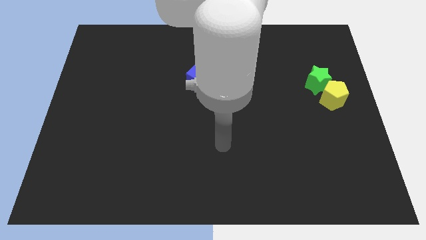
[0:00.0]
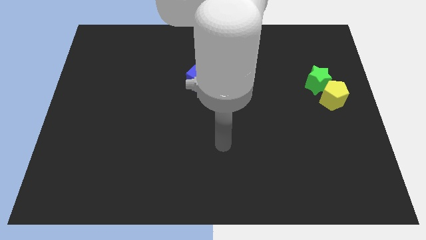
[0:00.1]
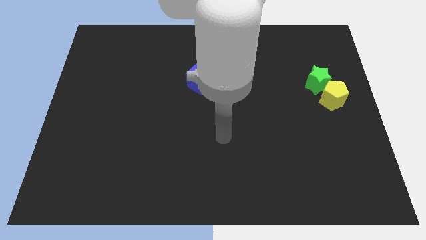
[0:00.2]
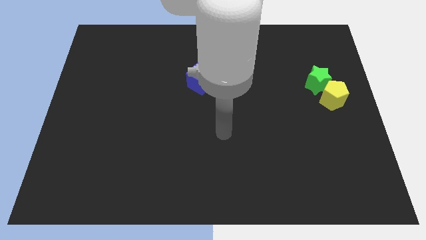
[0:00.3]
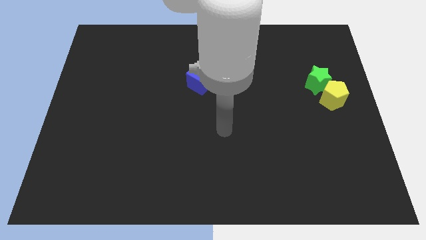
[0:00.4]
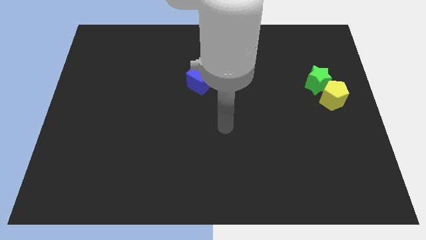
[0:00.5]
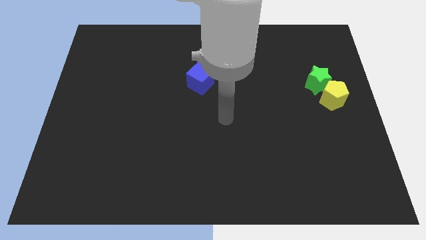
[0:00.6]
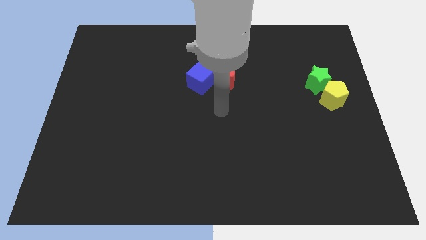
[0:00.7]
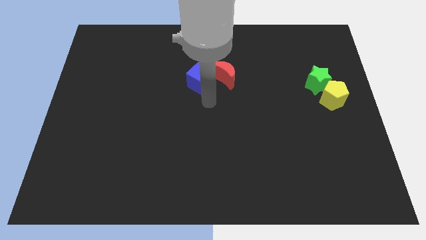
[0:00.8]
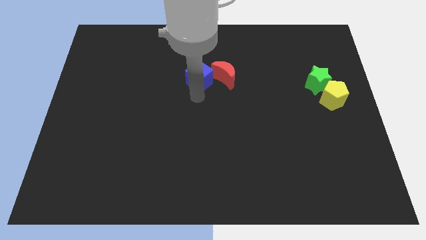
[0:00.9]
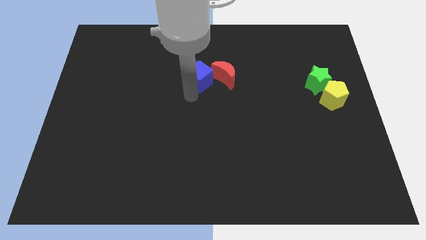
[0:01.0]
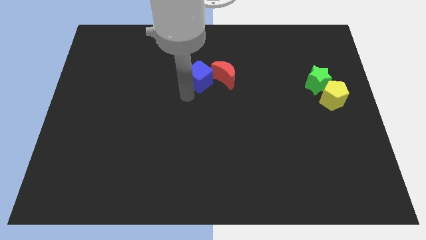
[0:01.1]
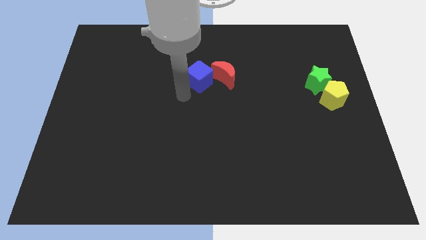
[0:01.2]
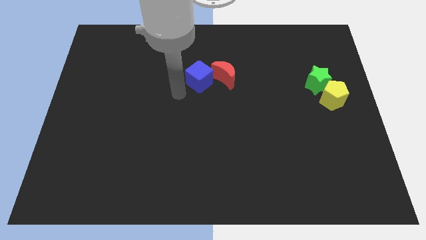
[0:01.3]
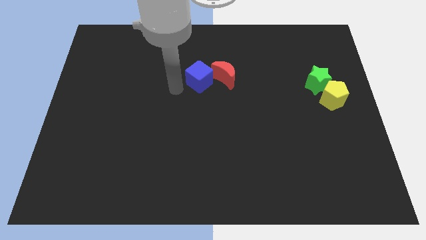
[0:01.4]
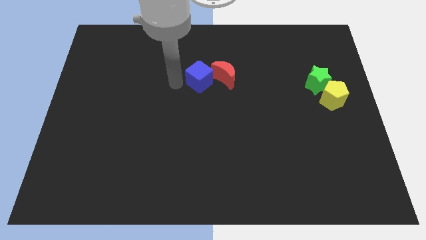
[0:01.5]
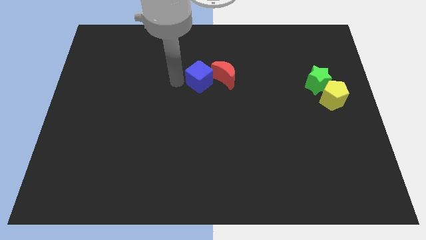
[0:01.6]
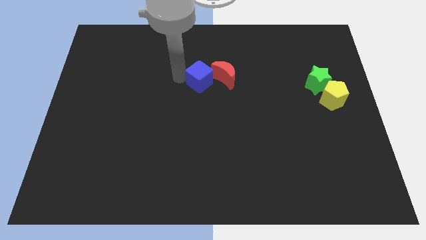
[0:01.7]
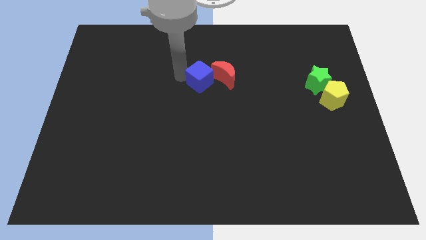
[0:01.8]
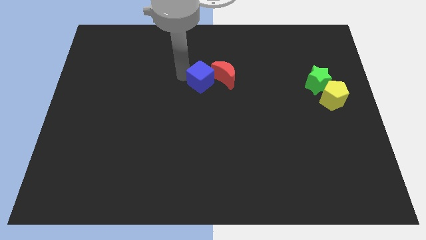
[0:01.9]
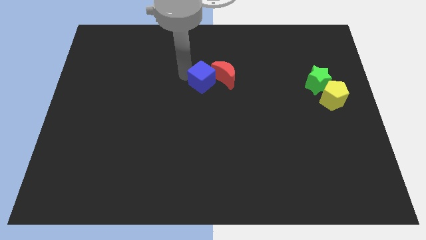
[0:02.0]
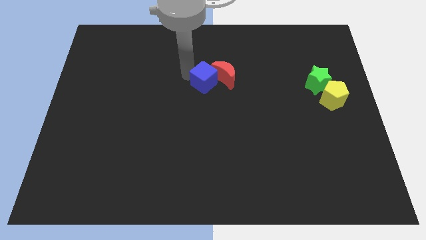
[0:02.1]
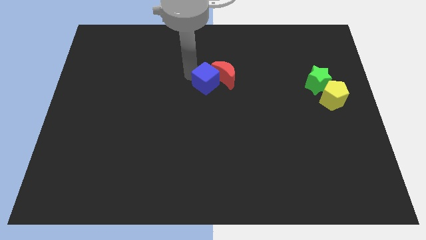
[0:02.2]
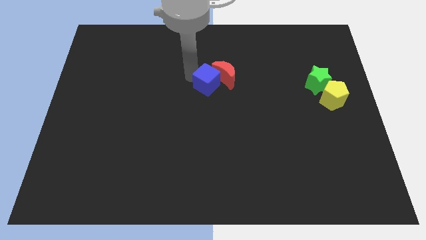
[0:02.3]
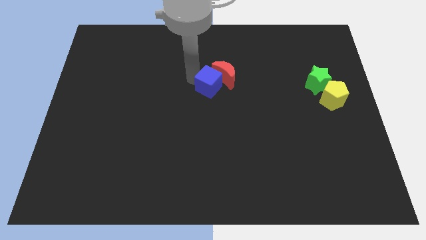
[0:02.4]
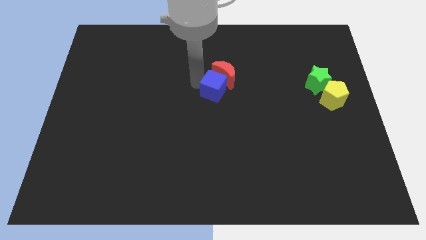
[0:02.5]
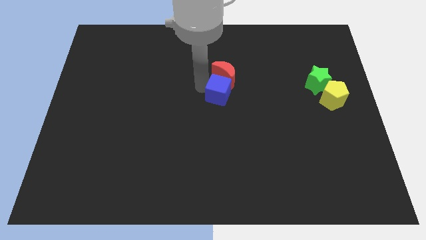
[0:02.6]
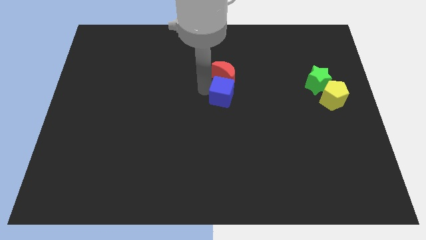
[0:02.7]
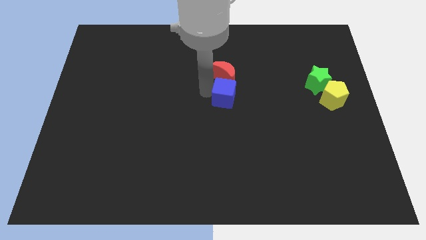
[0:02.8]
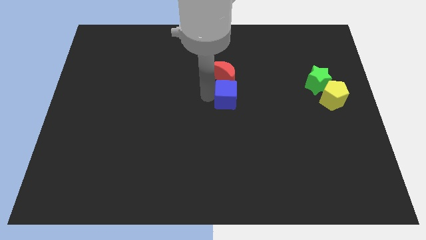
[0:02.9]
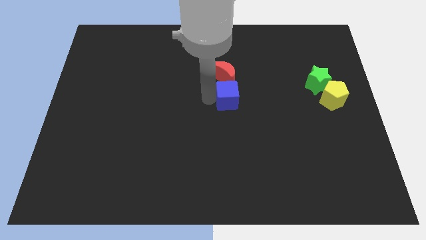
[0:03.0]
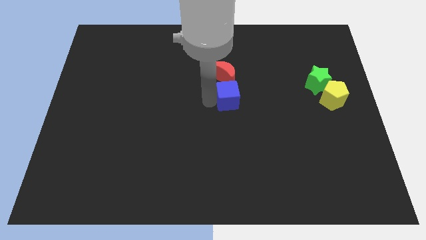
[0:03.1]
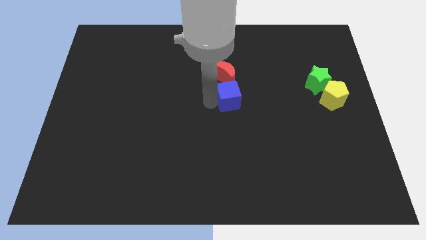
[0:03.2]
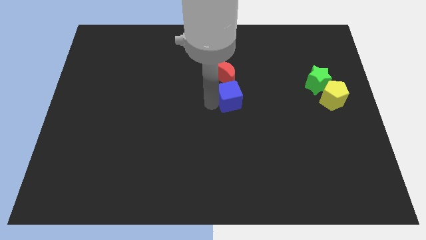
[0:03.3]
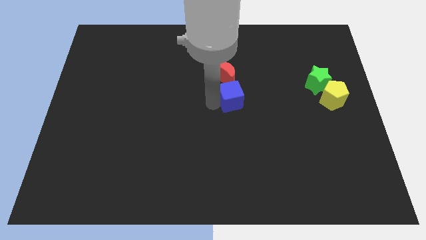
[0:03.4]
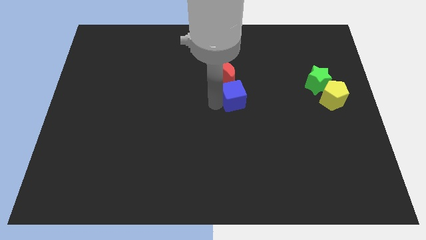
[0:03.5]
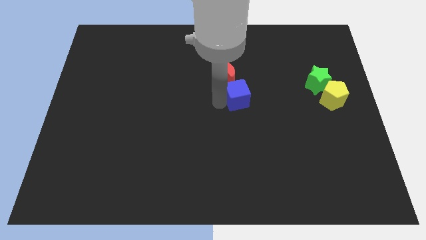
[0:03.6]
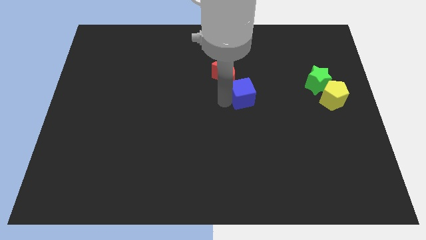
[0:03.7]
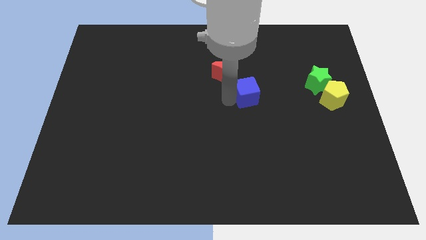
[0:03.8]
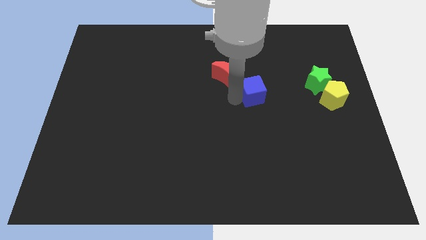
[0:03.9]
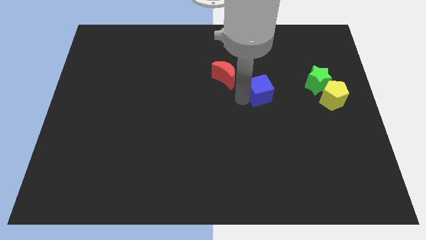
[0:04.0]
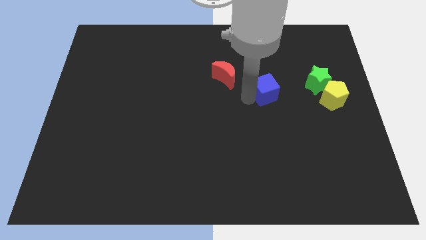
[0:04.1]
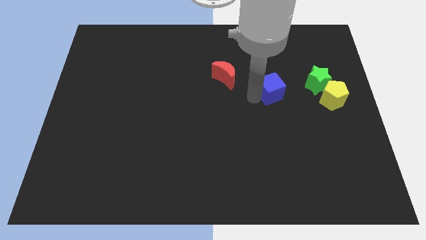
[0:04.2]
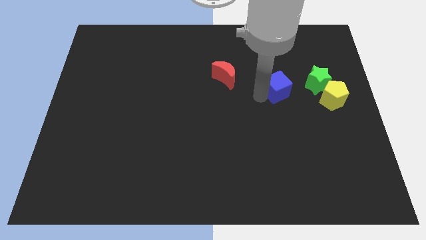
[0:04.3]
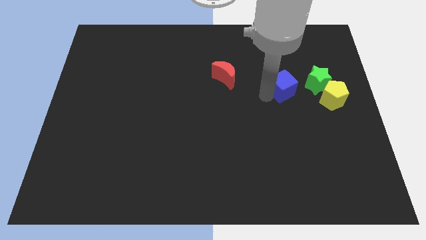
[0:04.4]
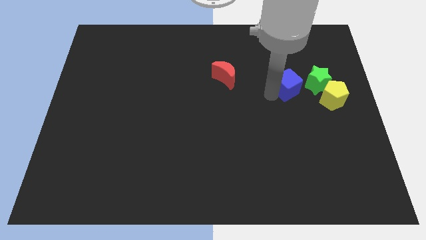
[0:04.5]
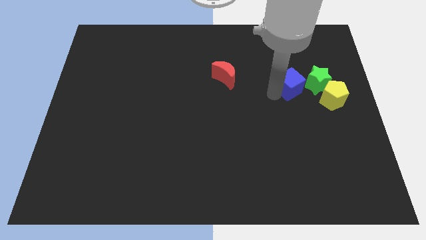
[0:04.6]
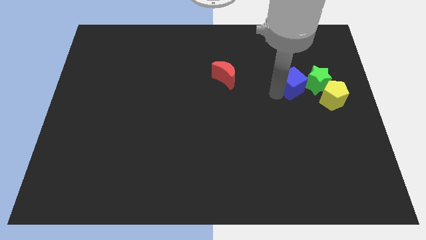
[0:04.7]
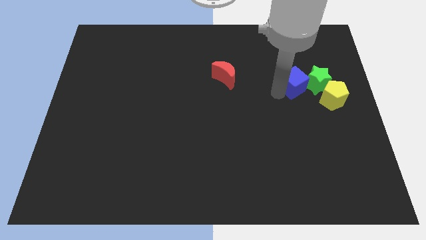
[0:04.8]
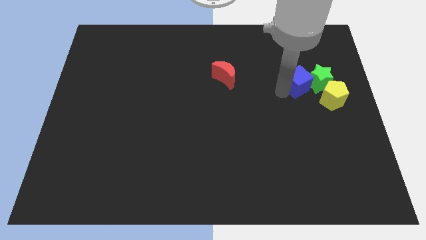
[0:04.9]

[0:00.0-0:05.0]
put the blue cube close to the green block

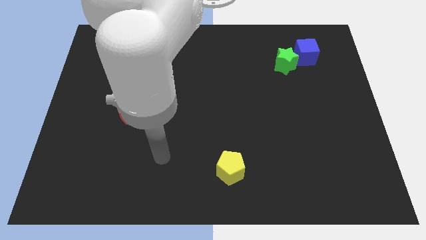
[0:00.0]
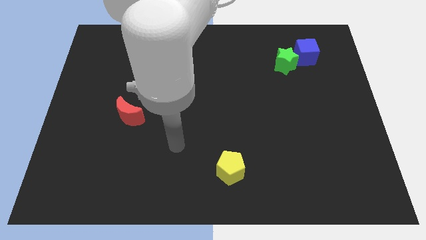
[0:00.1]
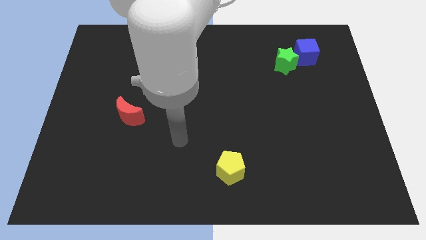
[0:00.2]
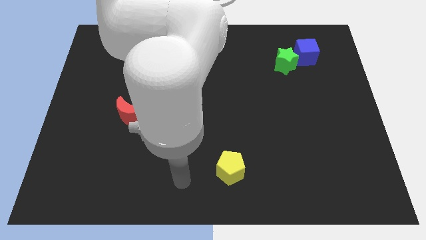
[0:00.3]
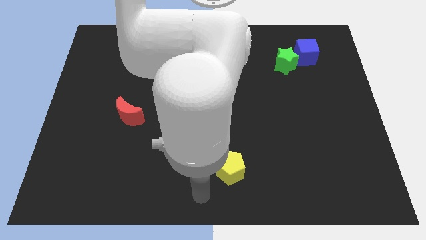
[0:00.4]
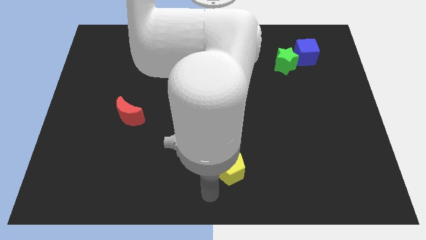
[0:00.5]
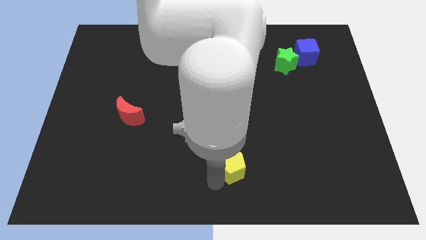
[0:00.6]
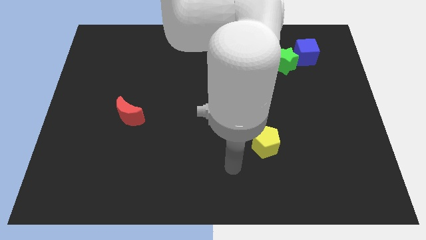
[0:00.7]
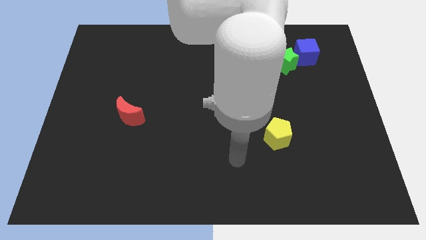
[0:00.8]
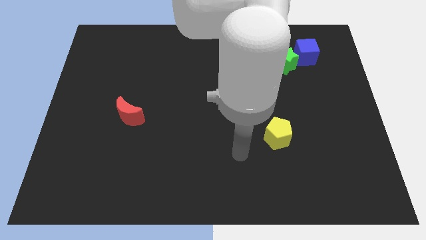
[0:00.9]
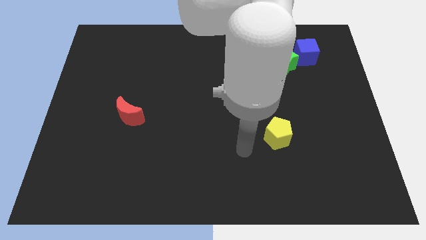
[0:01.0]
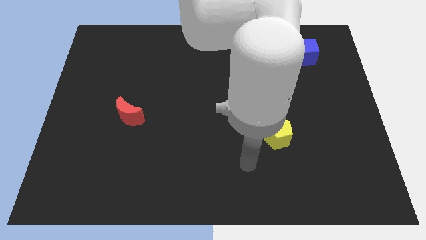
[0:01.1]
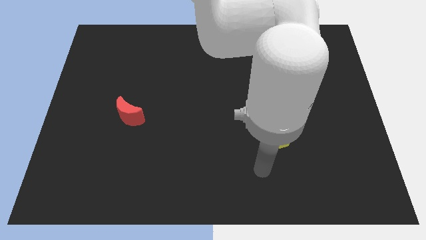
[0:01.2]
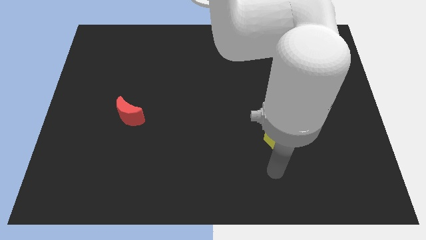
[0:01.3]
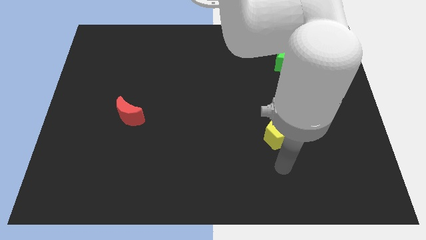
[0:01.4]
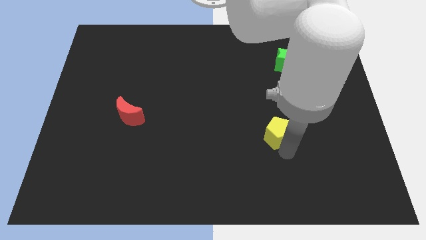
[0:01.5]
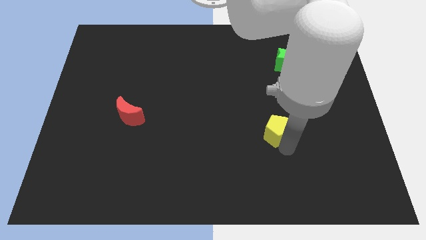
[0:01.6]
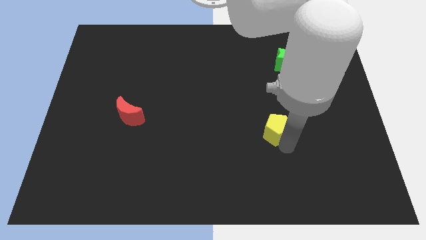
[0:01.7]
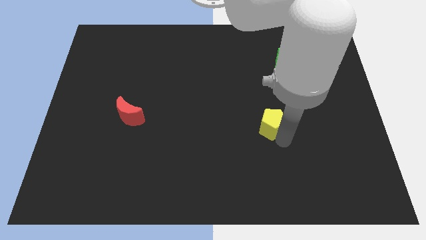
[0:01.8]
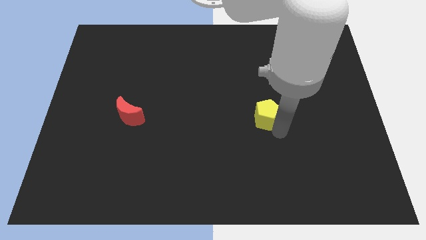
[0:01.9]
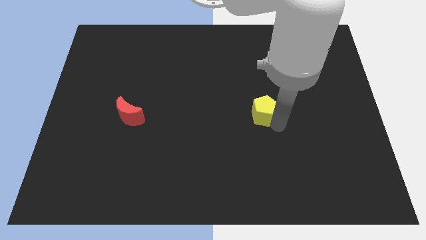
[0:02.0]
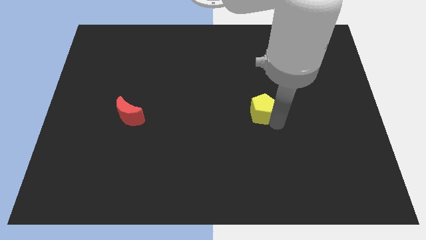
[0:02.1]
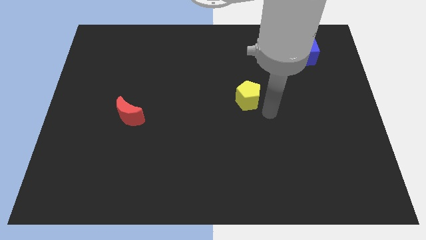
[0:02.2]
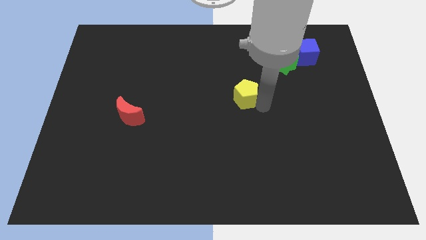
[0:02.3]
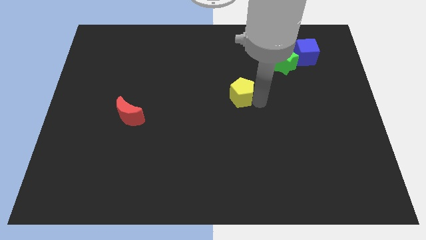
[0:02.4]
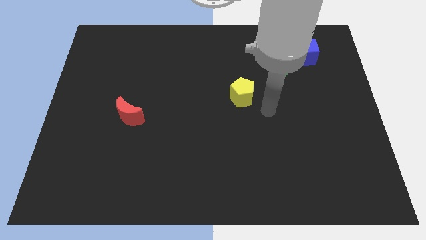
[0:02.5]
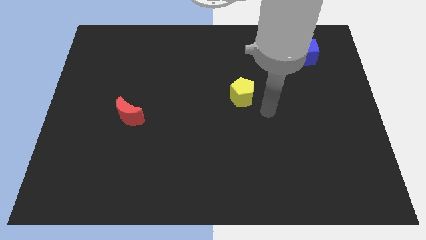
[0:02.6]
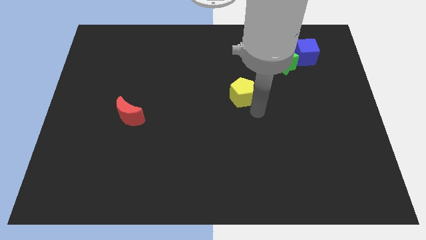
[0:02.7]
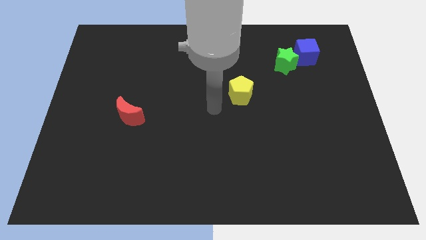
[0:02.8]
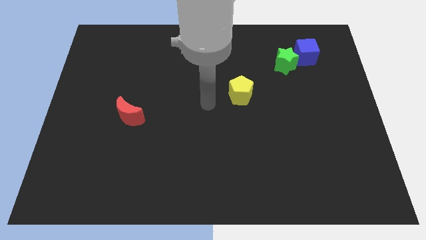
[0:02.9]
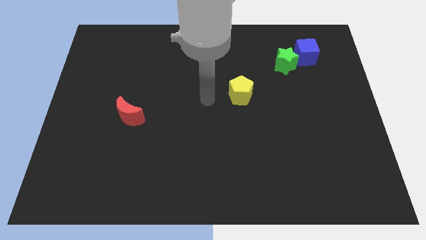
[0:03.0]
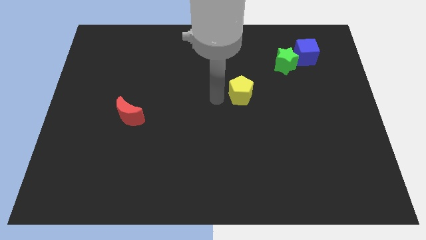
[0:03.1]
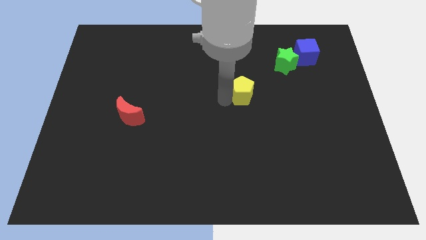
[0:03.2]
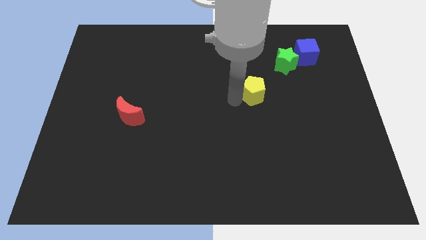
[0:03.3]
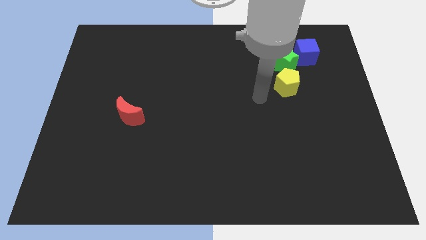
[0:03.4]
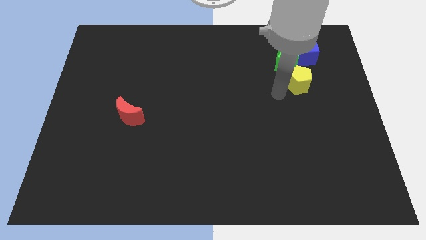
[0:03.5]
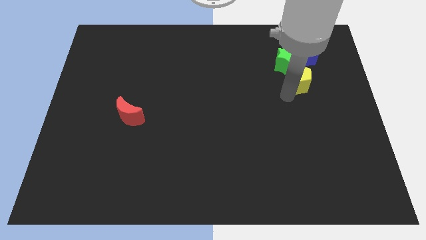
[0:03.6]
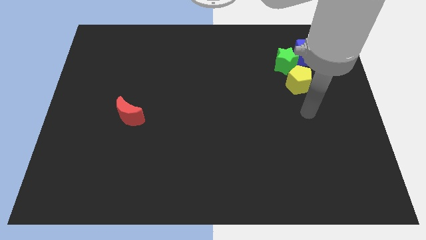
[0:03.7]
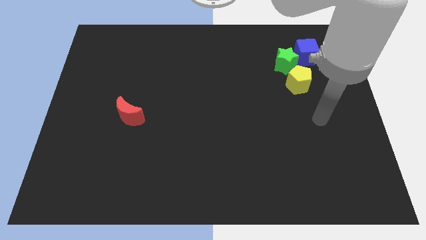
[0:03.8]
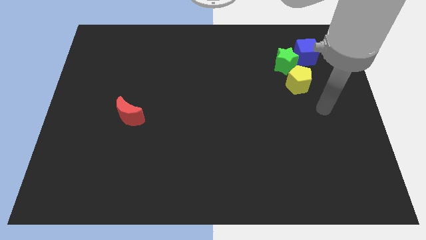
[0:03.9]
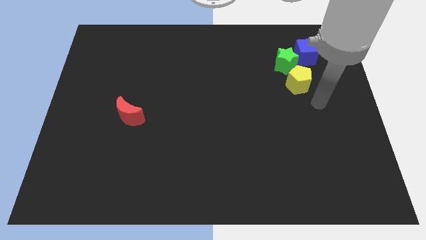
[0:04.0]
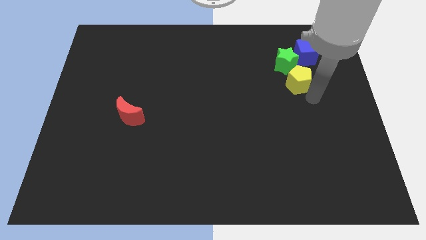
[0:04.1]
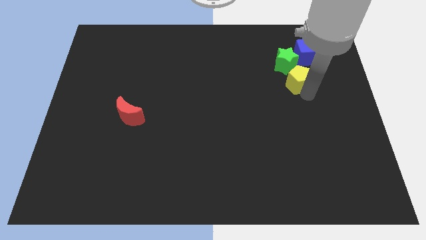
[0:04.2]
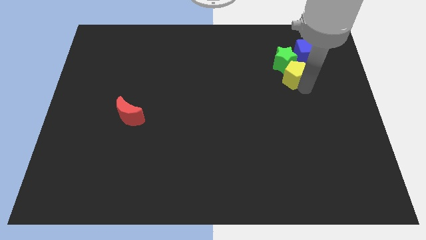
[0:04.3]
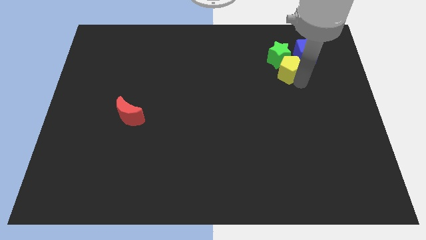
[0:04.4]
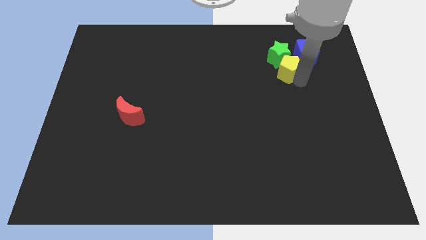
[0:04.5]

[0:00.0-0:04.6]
push the pentagon towards the star
